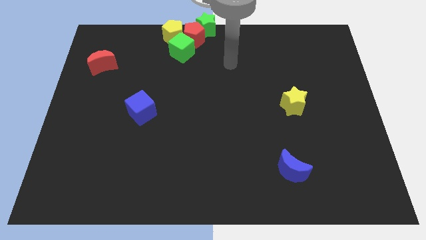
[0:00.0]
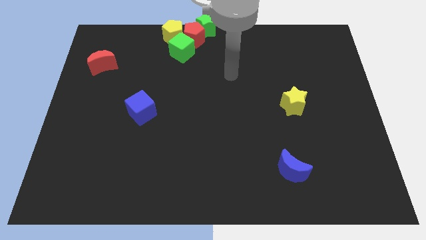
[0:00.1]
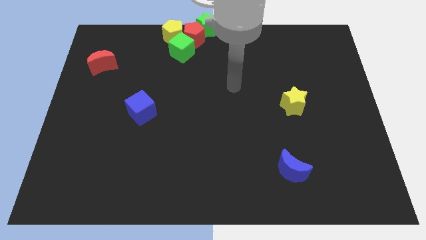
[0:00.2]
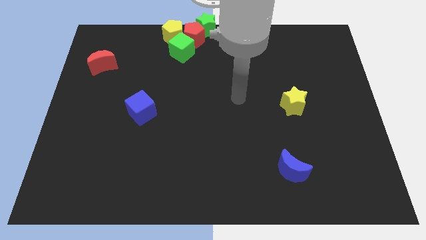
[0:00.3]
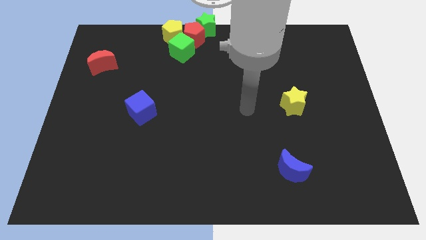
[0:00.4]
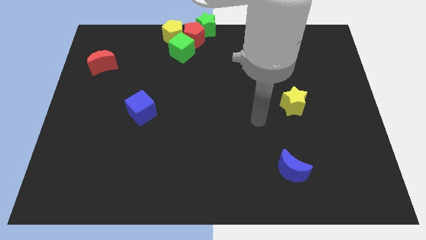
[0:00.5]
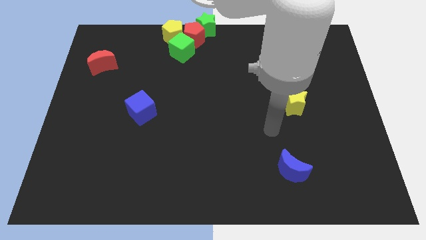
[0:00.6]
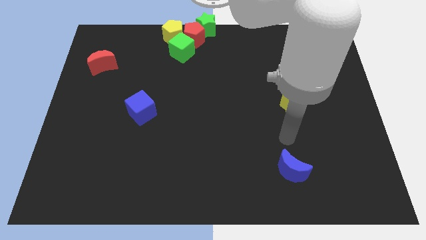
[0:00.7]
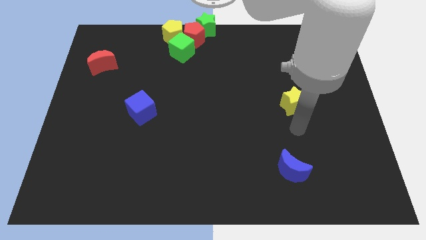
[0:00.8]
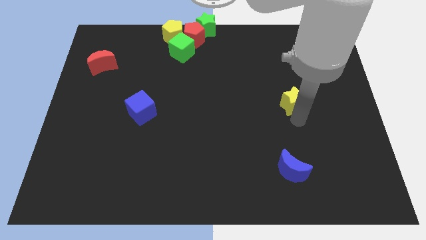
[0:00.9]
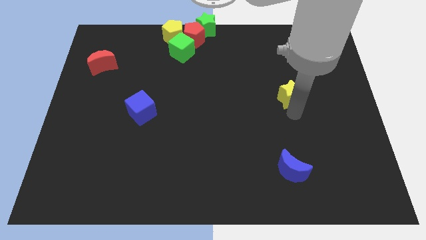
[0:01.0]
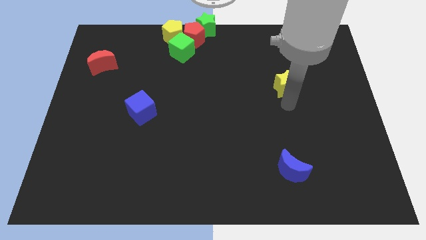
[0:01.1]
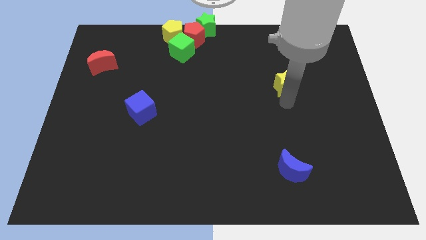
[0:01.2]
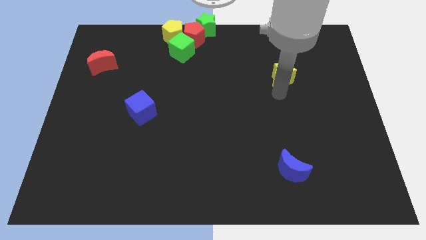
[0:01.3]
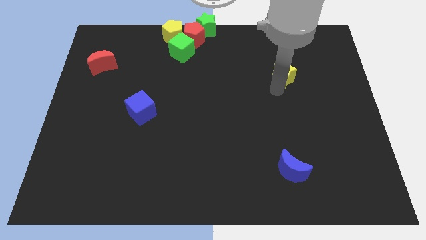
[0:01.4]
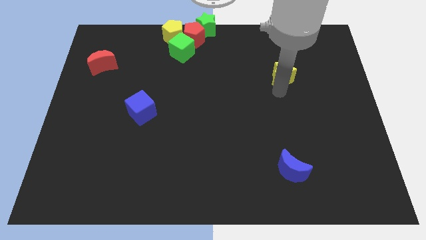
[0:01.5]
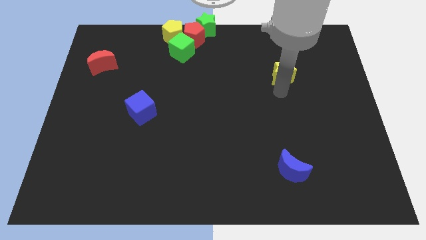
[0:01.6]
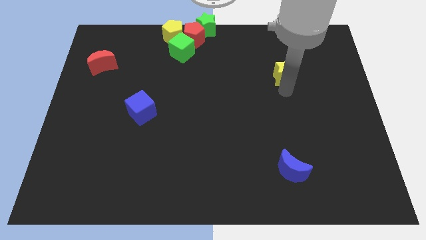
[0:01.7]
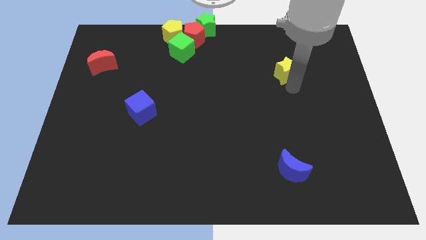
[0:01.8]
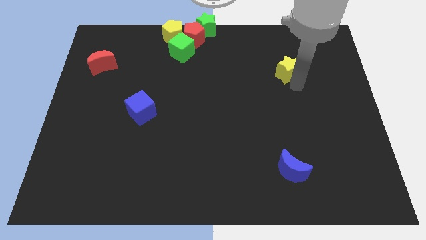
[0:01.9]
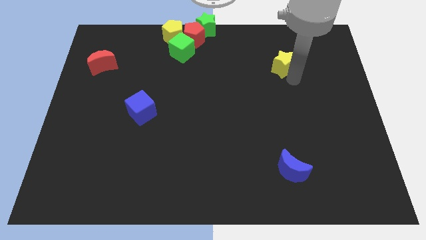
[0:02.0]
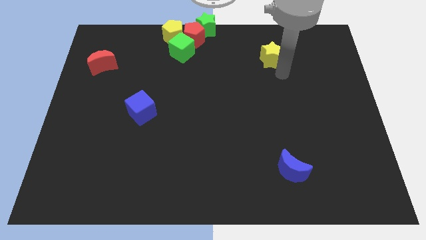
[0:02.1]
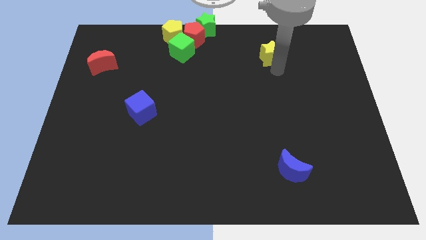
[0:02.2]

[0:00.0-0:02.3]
place yellow star parallel to green cube

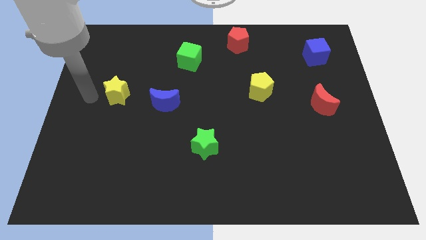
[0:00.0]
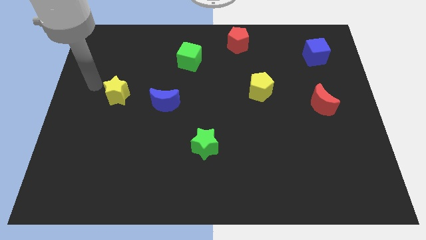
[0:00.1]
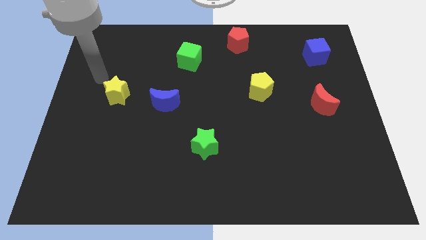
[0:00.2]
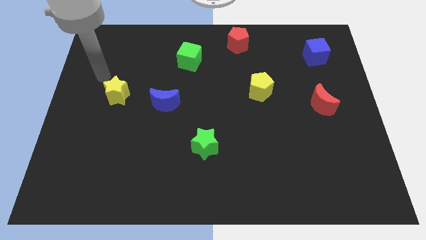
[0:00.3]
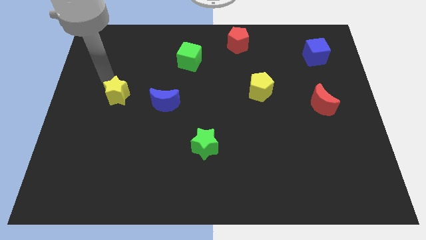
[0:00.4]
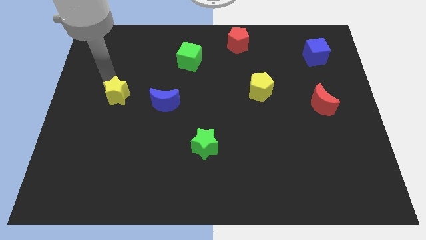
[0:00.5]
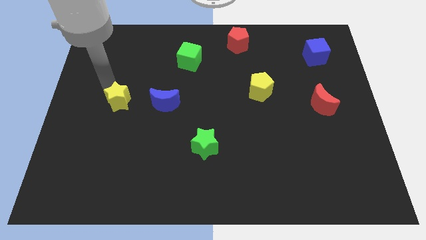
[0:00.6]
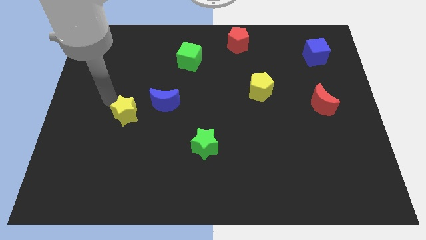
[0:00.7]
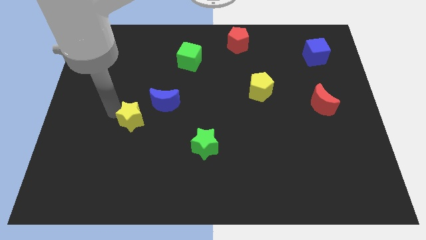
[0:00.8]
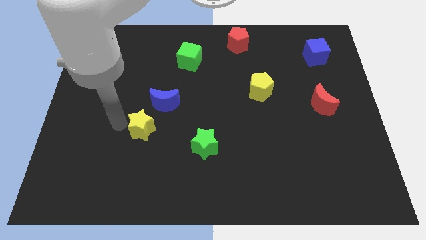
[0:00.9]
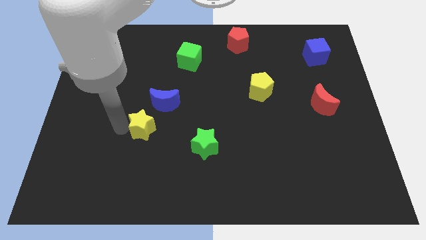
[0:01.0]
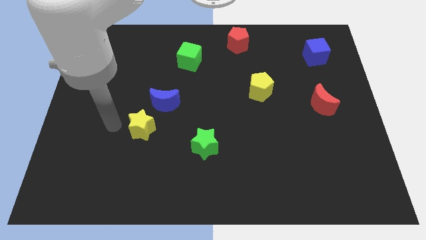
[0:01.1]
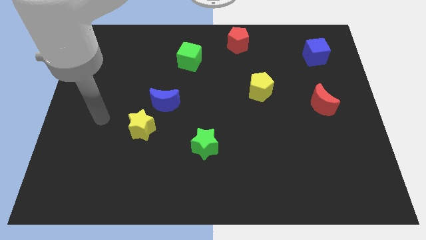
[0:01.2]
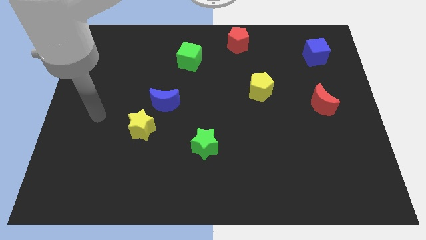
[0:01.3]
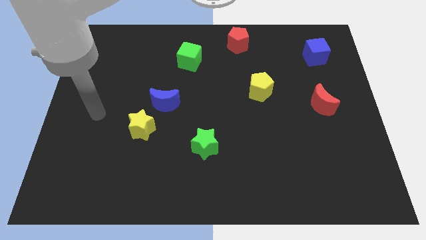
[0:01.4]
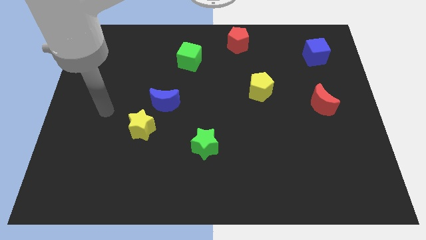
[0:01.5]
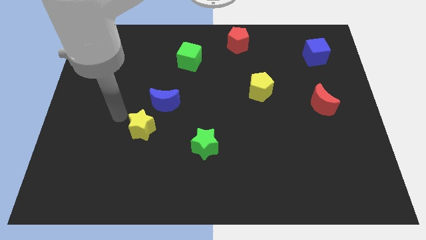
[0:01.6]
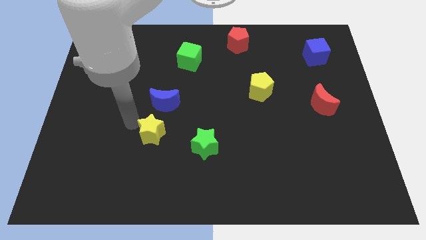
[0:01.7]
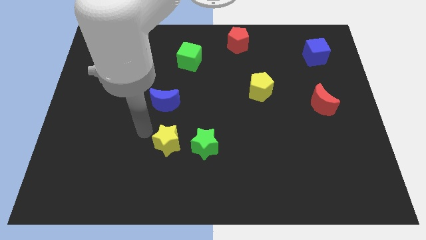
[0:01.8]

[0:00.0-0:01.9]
slide the yellow star to the bottom side of the blue moon

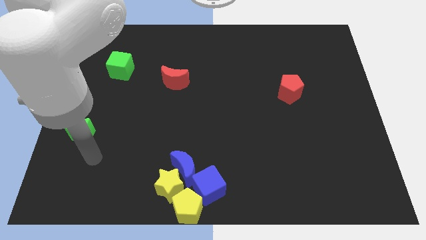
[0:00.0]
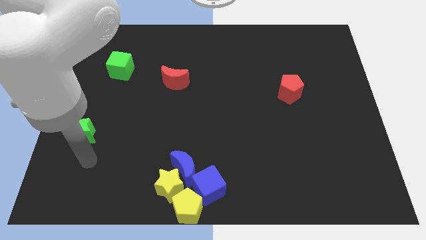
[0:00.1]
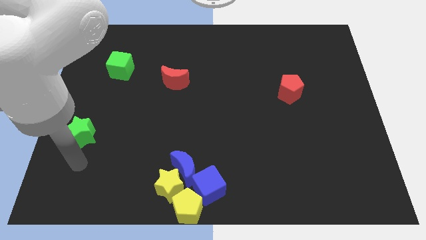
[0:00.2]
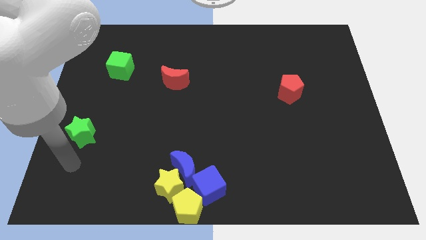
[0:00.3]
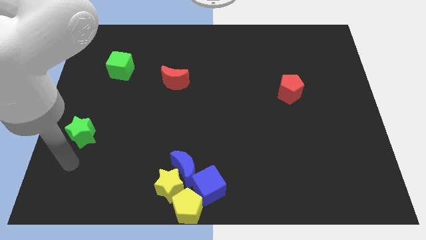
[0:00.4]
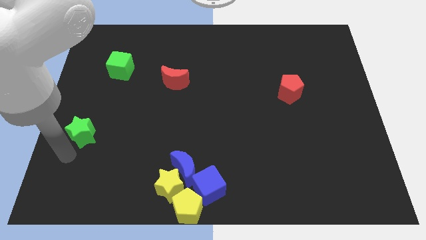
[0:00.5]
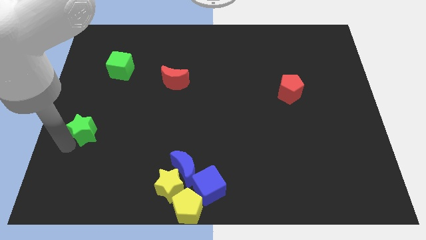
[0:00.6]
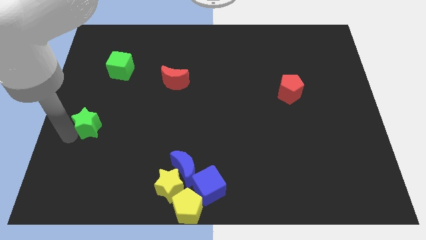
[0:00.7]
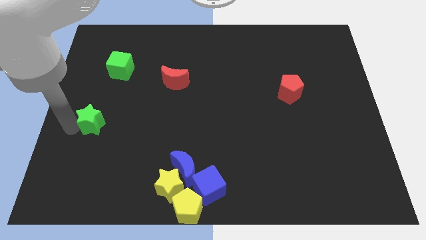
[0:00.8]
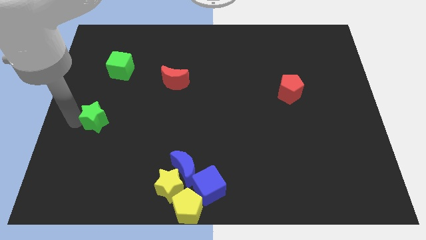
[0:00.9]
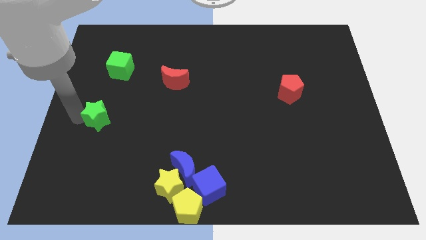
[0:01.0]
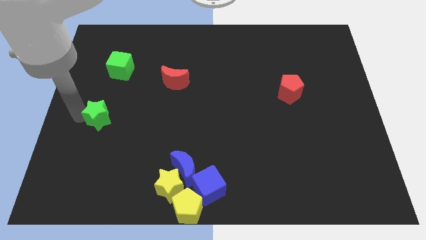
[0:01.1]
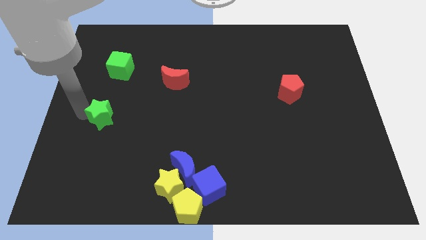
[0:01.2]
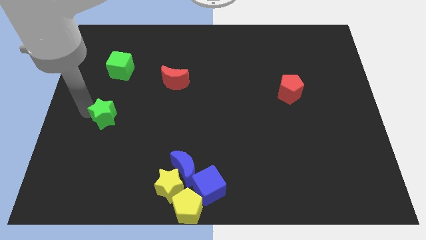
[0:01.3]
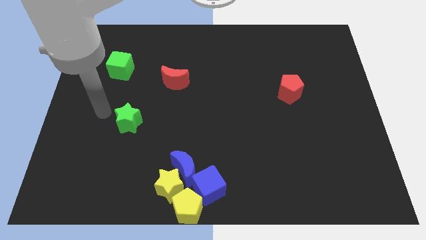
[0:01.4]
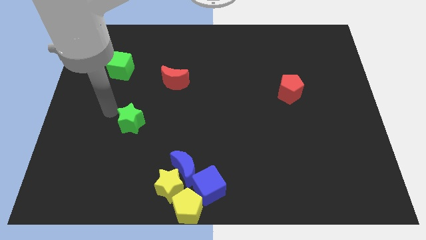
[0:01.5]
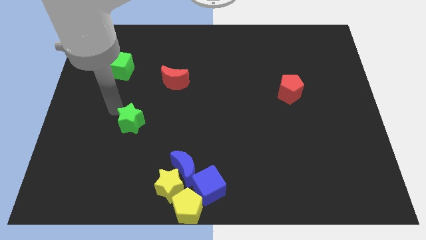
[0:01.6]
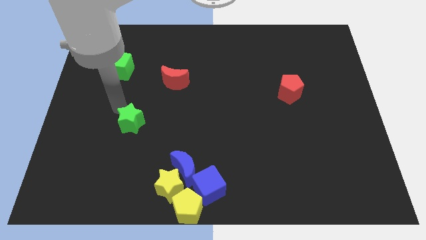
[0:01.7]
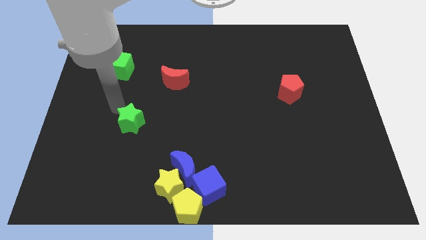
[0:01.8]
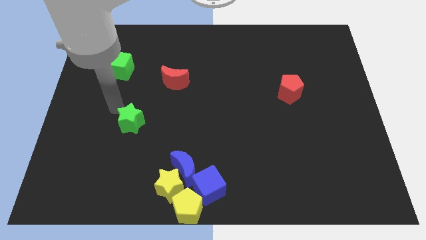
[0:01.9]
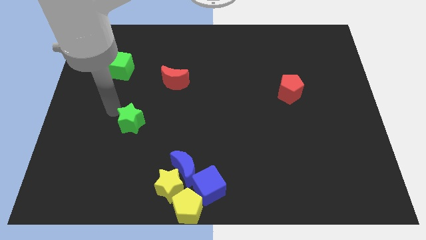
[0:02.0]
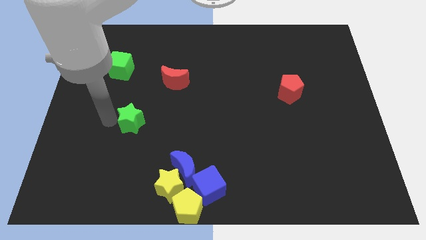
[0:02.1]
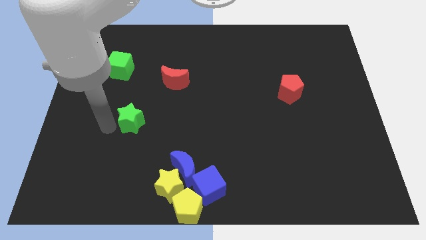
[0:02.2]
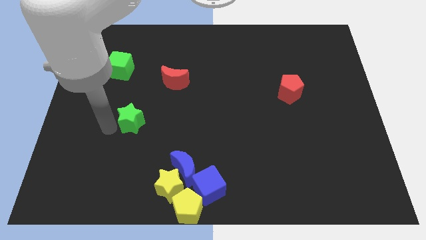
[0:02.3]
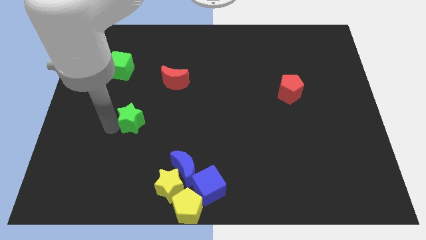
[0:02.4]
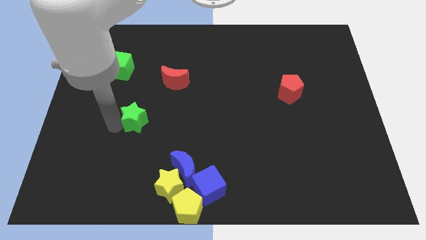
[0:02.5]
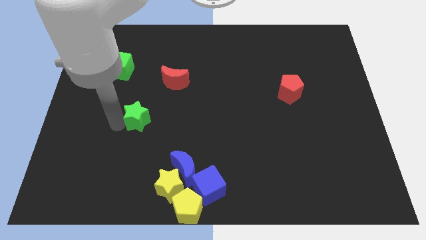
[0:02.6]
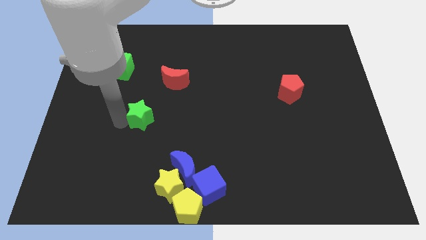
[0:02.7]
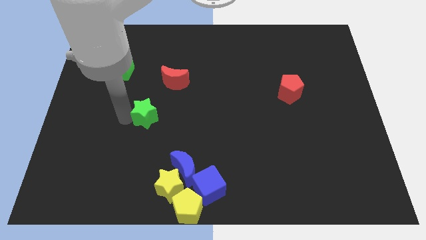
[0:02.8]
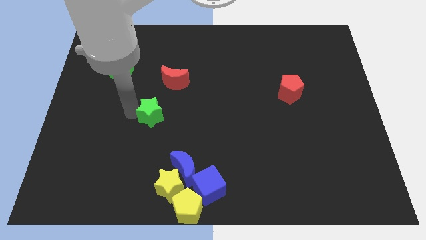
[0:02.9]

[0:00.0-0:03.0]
push the green star to the bottom left of the red crescent

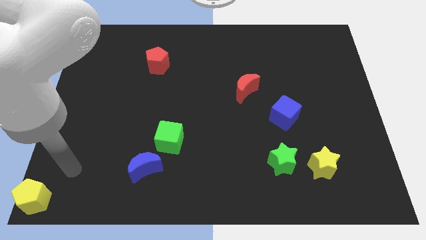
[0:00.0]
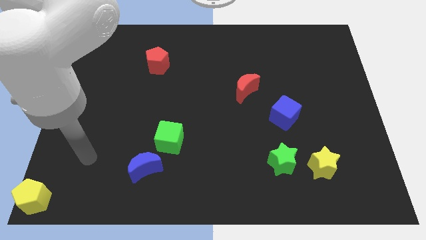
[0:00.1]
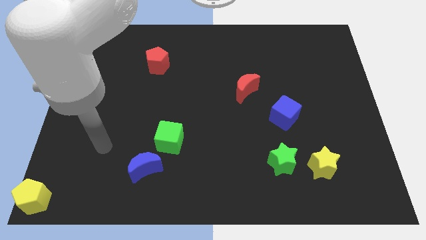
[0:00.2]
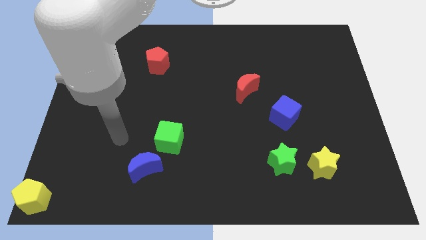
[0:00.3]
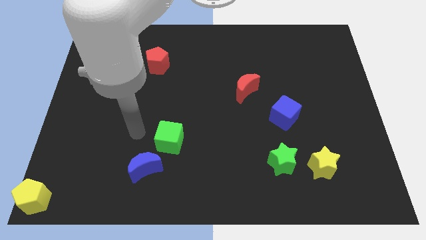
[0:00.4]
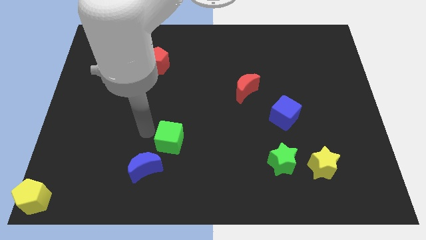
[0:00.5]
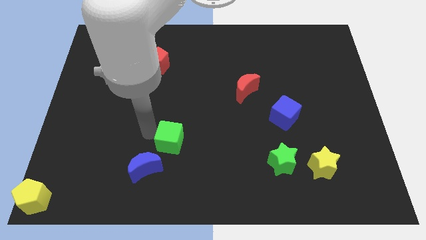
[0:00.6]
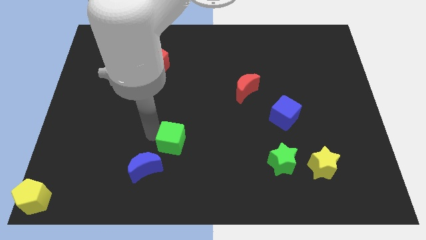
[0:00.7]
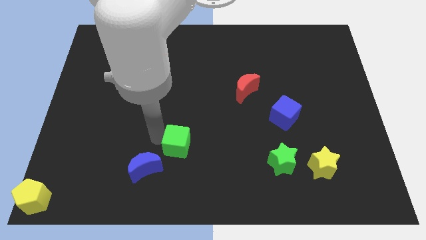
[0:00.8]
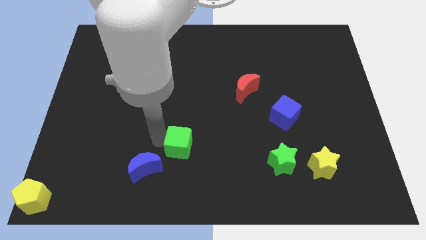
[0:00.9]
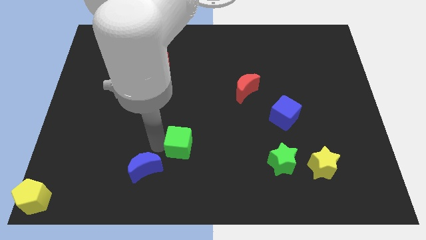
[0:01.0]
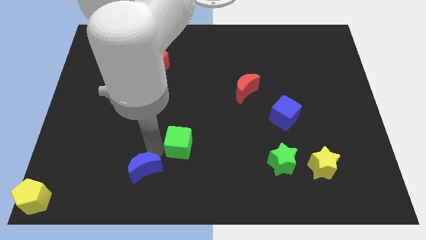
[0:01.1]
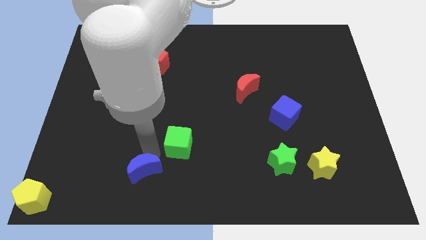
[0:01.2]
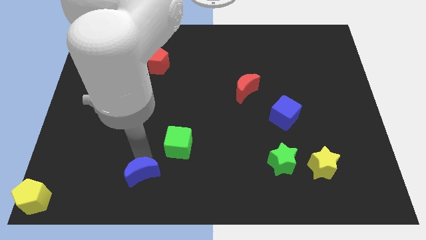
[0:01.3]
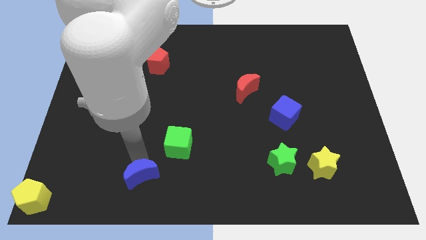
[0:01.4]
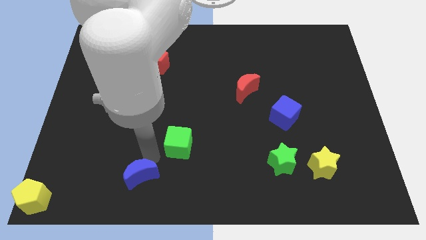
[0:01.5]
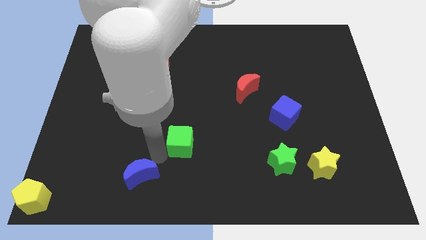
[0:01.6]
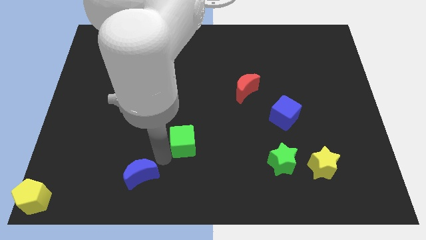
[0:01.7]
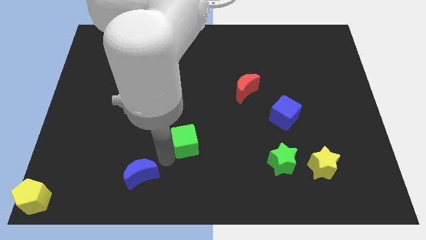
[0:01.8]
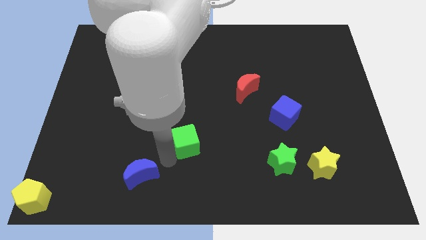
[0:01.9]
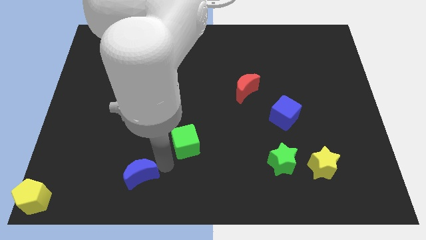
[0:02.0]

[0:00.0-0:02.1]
separate green cube and blue moon
